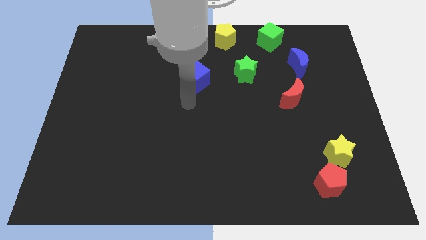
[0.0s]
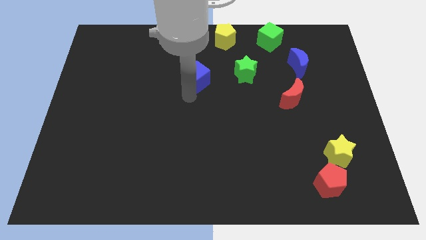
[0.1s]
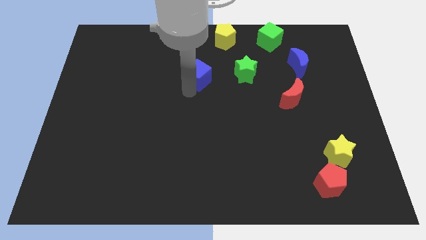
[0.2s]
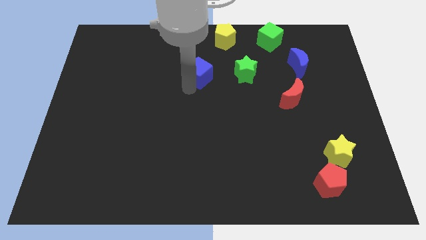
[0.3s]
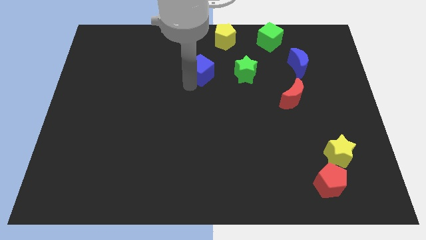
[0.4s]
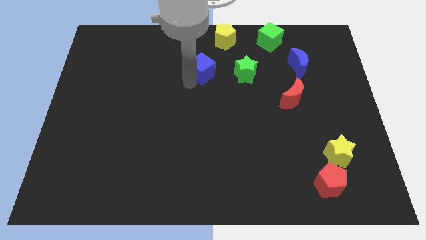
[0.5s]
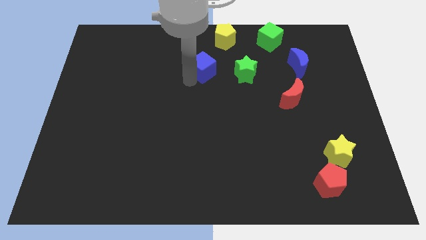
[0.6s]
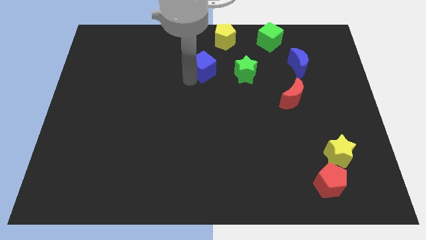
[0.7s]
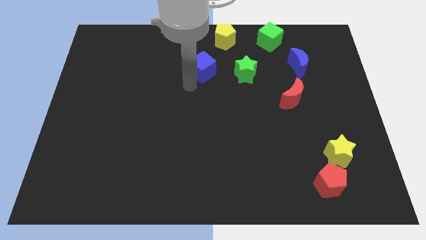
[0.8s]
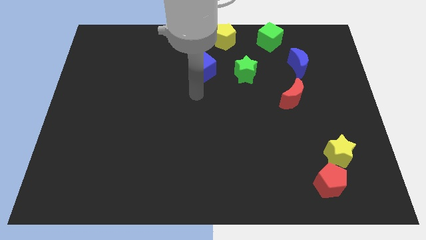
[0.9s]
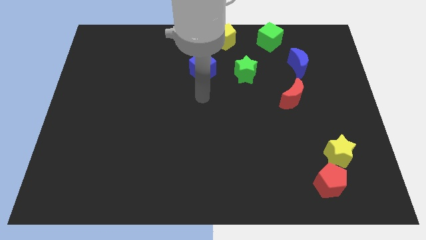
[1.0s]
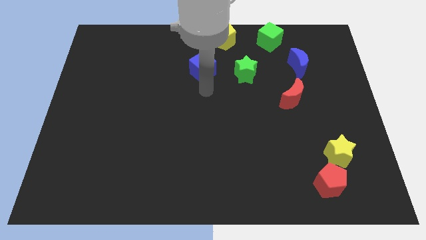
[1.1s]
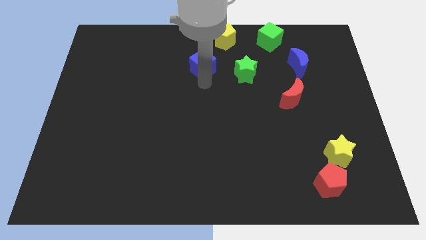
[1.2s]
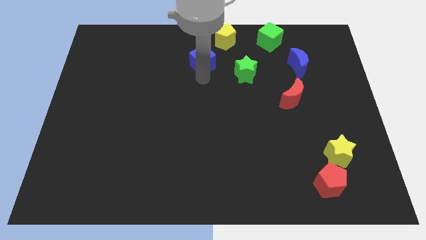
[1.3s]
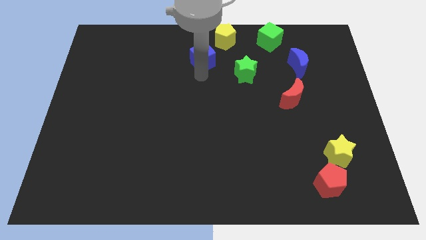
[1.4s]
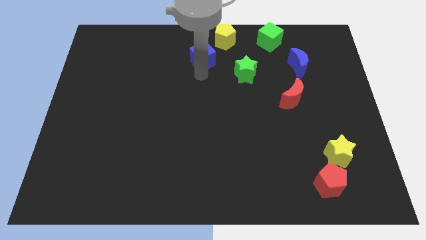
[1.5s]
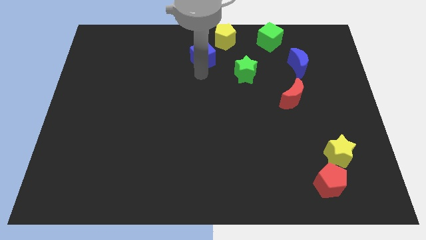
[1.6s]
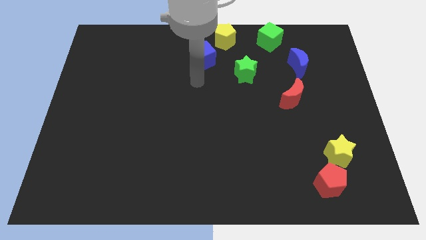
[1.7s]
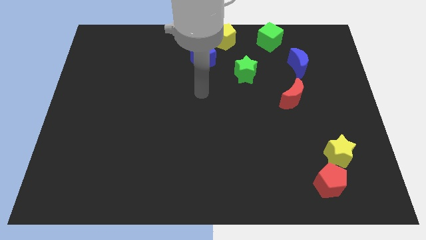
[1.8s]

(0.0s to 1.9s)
push the blue cube closer to the green star

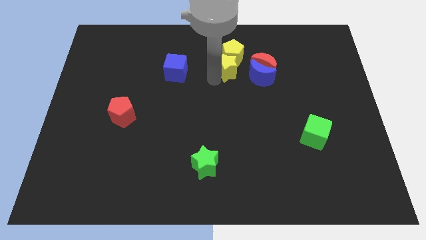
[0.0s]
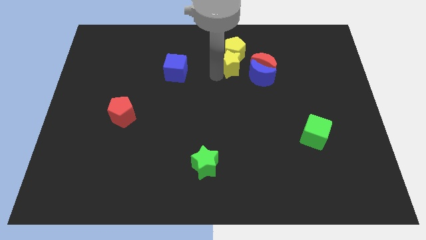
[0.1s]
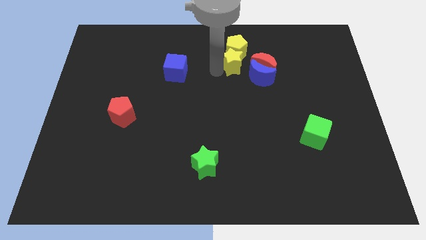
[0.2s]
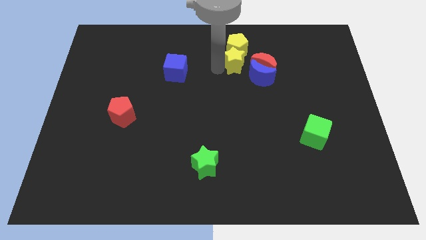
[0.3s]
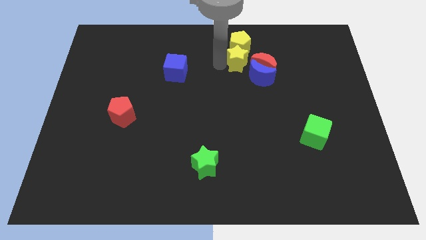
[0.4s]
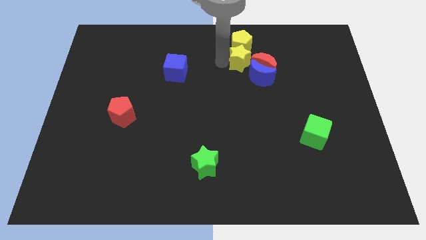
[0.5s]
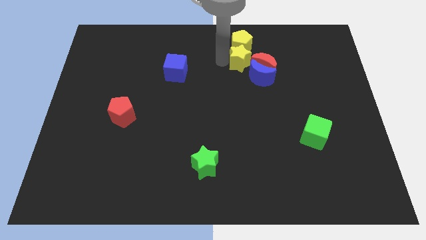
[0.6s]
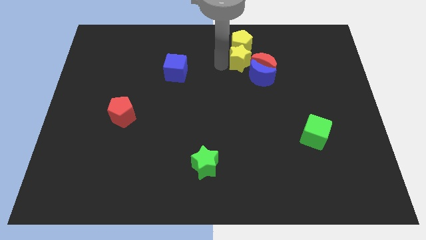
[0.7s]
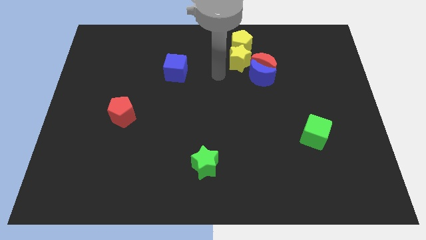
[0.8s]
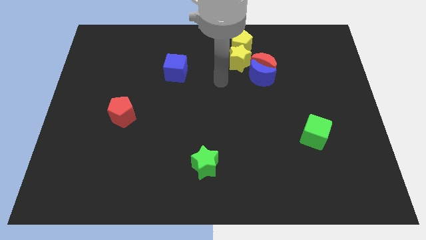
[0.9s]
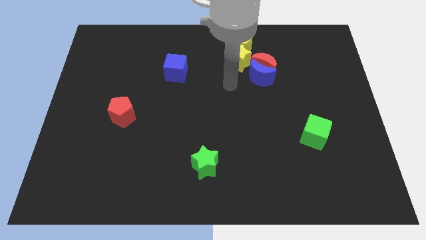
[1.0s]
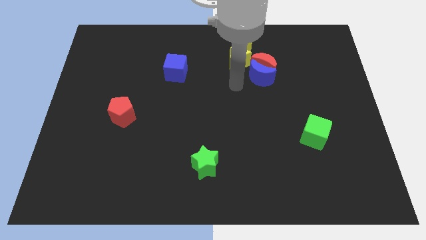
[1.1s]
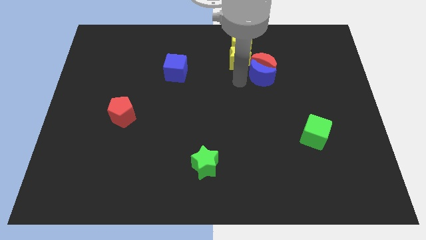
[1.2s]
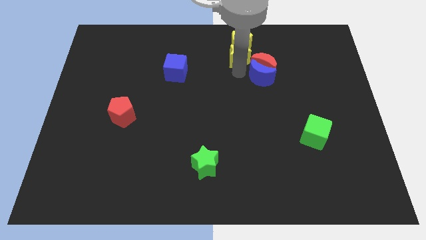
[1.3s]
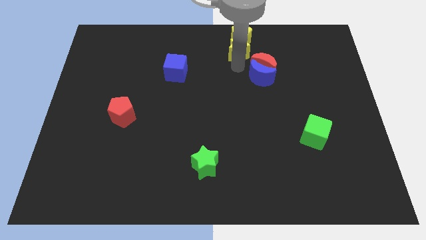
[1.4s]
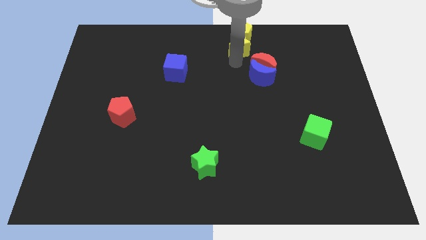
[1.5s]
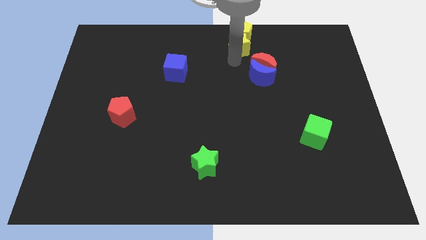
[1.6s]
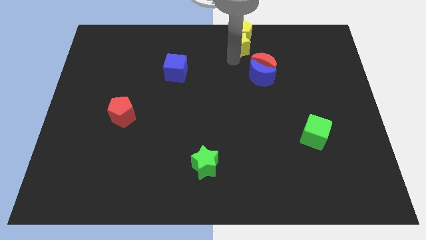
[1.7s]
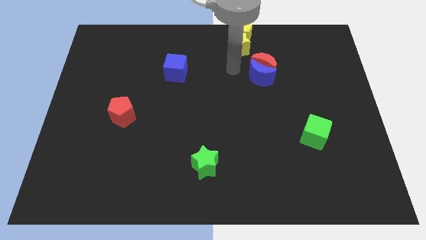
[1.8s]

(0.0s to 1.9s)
push the yellow star along with the yellow pentagon to the top side

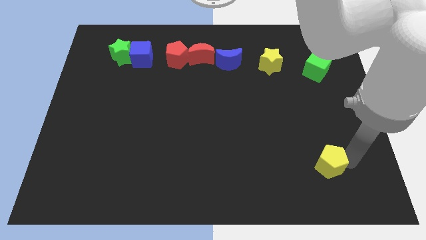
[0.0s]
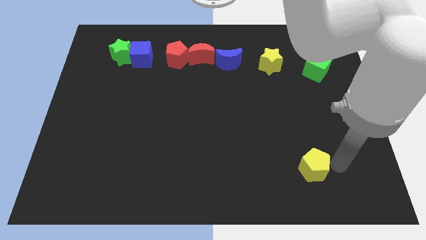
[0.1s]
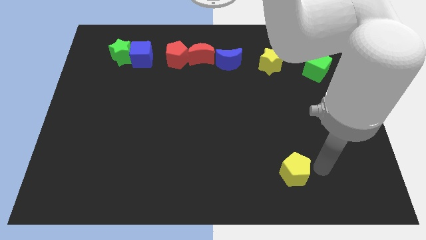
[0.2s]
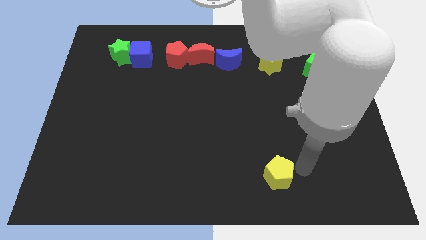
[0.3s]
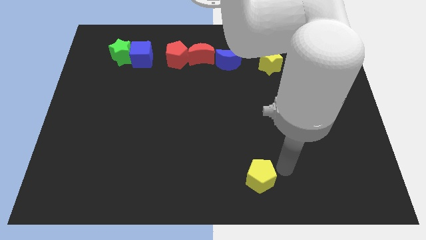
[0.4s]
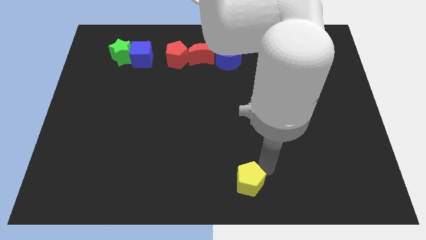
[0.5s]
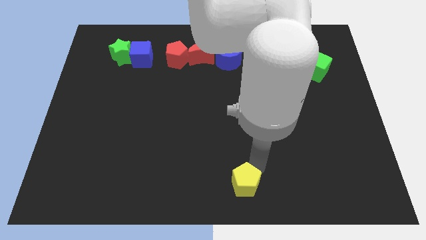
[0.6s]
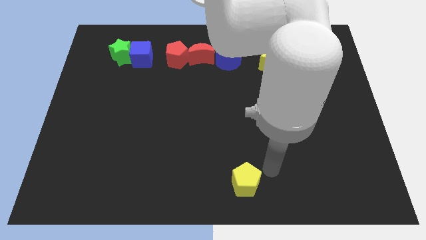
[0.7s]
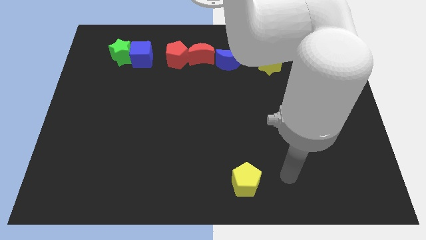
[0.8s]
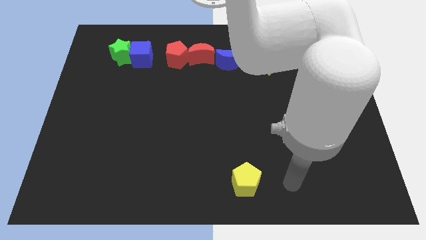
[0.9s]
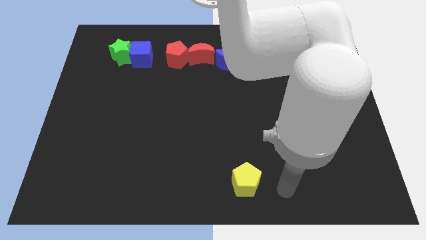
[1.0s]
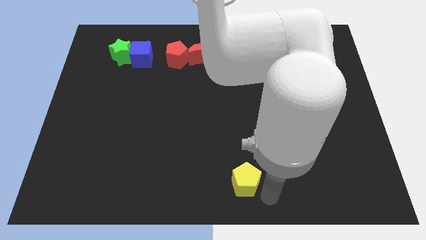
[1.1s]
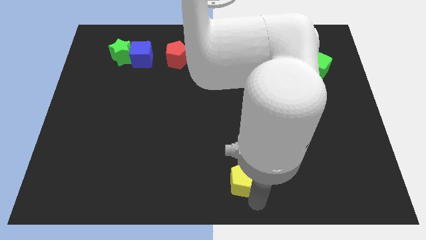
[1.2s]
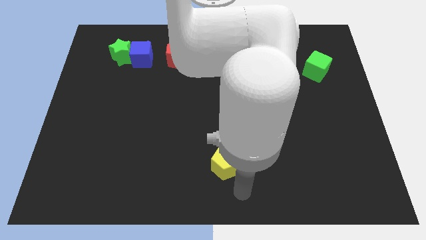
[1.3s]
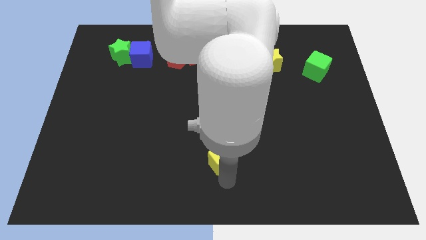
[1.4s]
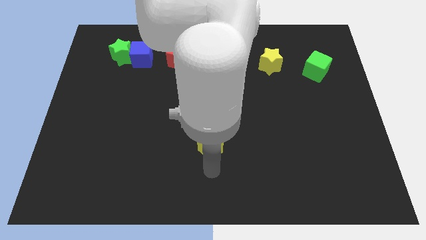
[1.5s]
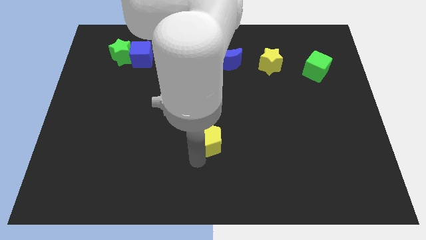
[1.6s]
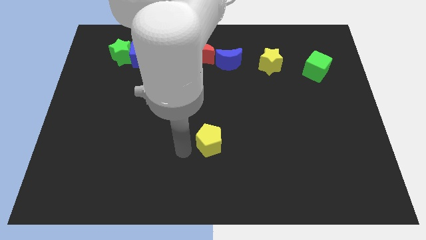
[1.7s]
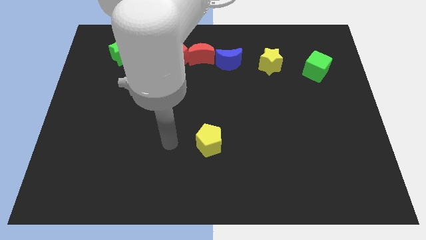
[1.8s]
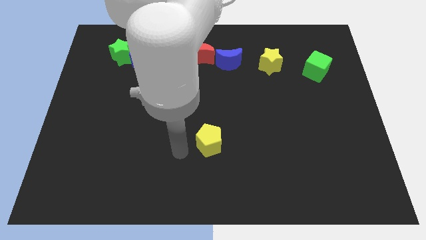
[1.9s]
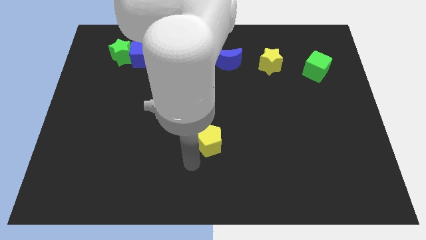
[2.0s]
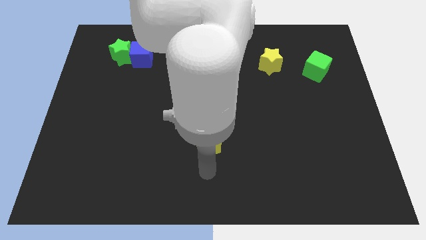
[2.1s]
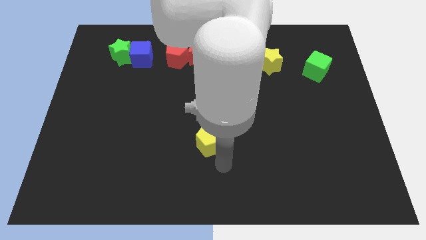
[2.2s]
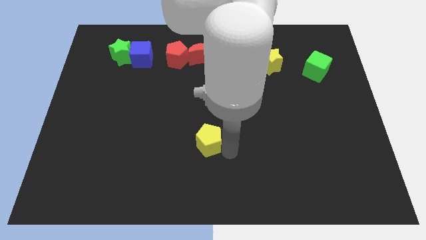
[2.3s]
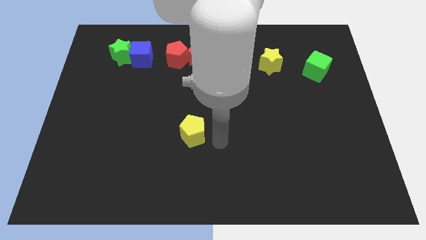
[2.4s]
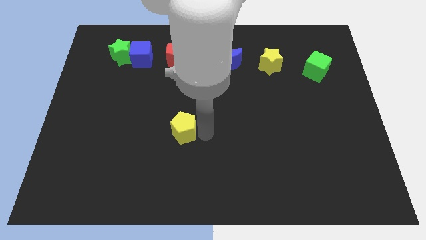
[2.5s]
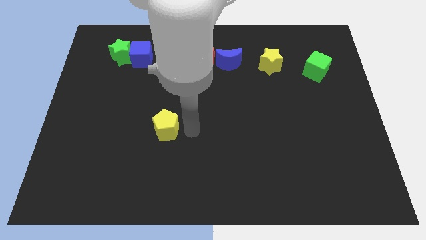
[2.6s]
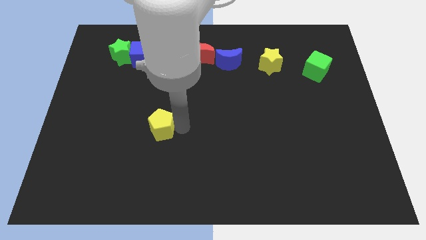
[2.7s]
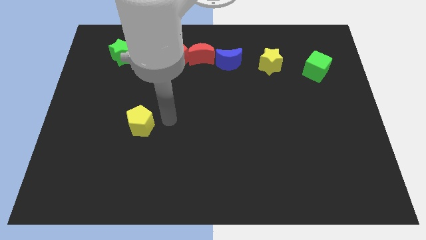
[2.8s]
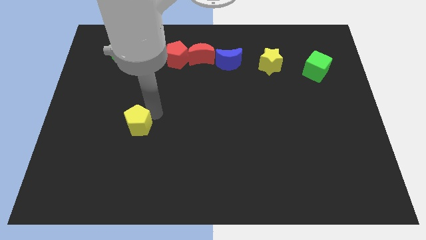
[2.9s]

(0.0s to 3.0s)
place yellow pentagon to the bottom of the blue cube

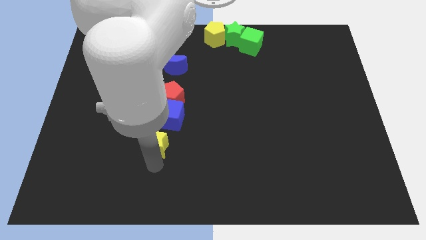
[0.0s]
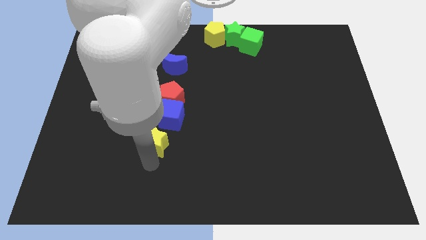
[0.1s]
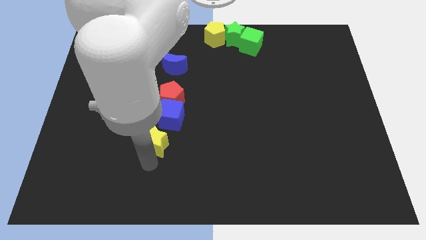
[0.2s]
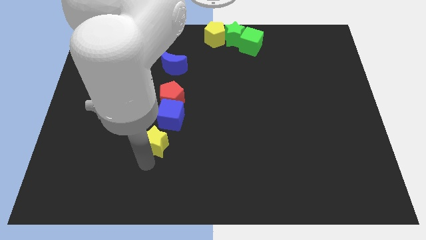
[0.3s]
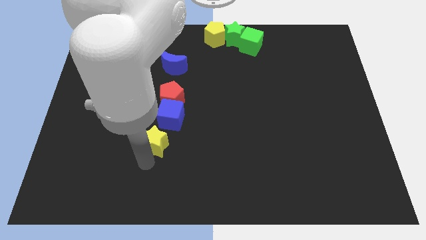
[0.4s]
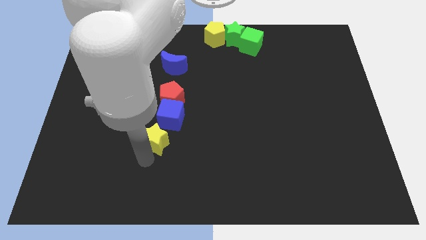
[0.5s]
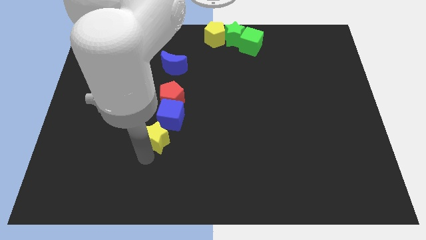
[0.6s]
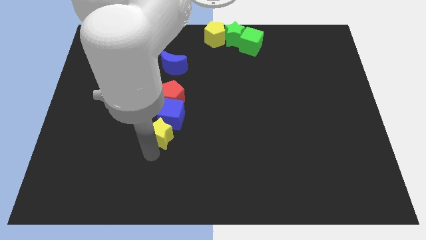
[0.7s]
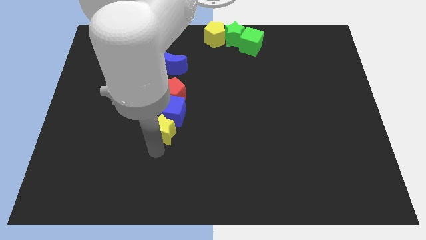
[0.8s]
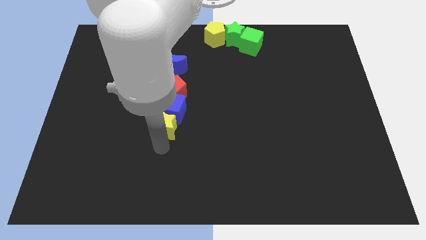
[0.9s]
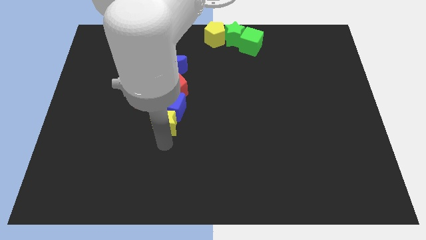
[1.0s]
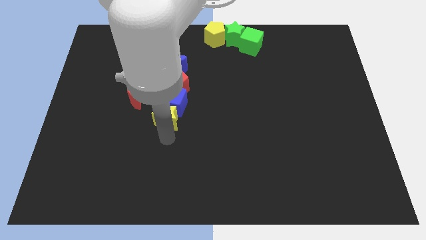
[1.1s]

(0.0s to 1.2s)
push the yellow star into the blue cube

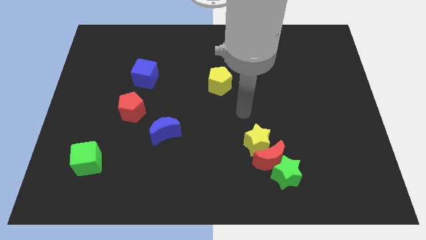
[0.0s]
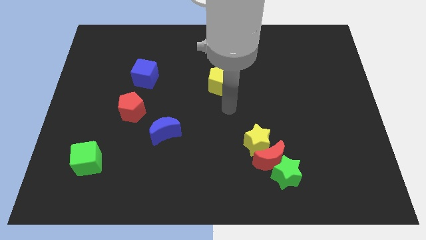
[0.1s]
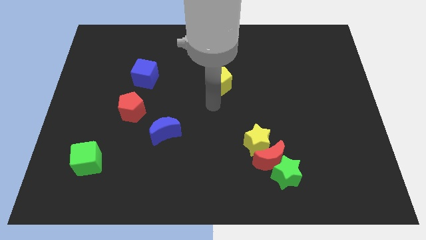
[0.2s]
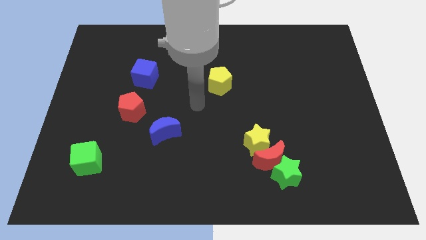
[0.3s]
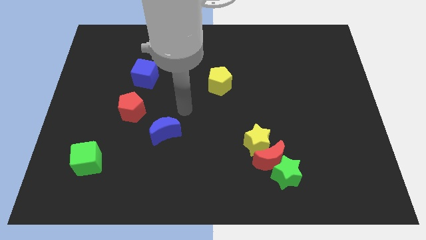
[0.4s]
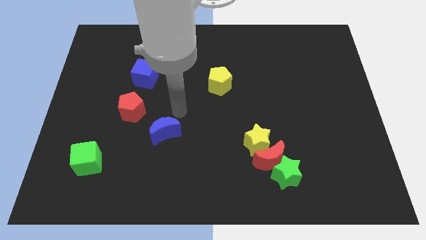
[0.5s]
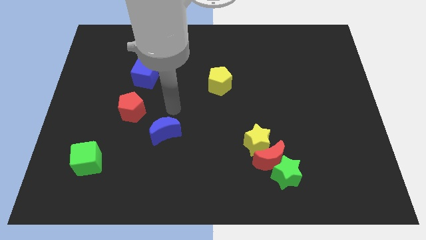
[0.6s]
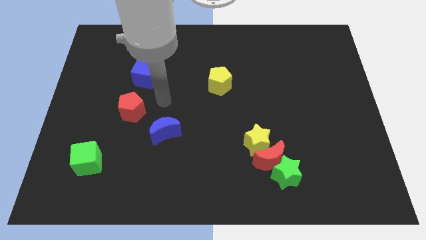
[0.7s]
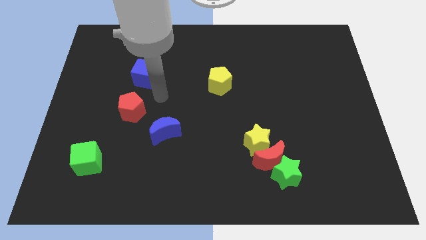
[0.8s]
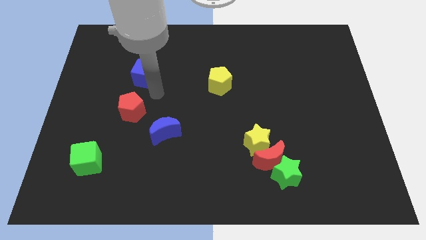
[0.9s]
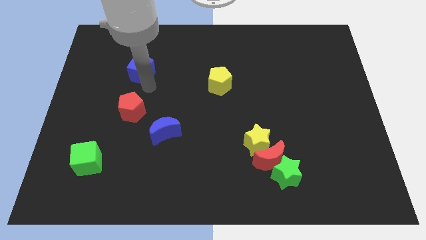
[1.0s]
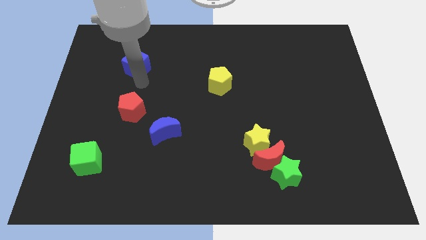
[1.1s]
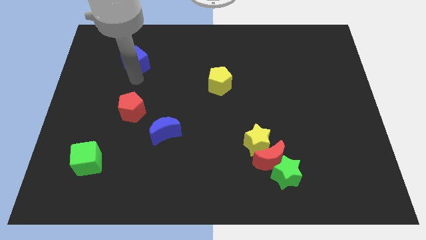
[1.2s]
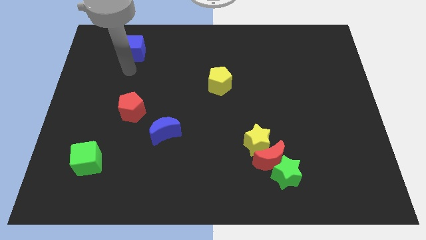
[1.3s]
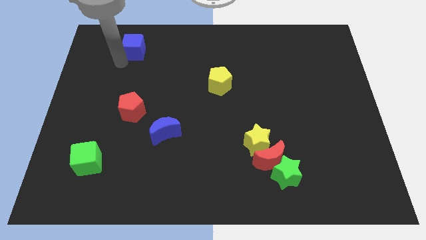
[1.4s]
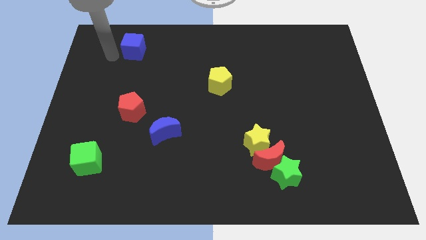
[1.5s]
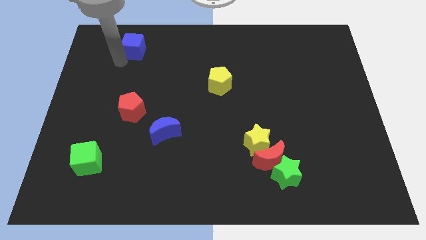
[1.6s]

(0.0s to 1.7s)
push the blue cube towards top side
